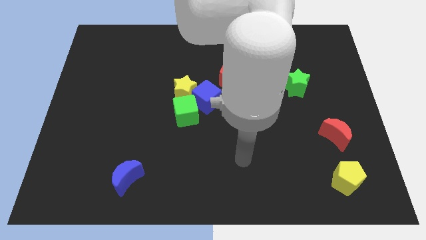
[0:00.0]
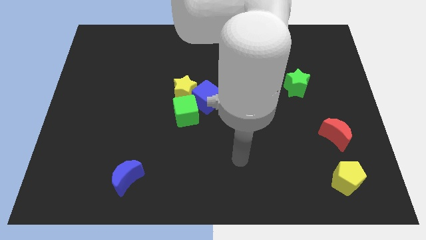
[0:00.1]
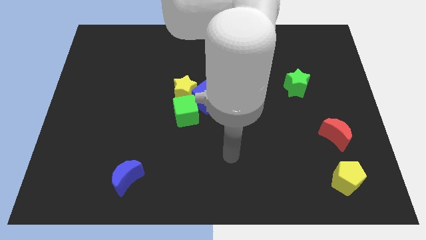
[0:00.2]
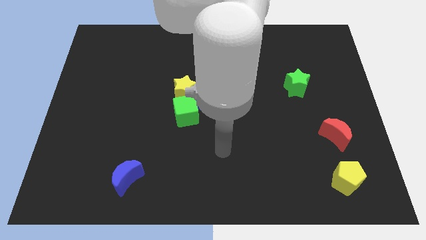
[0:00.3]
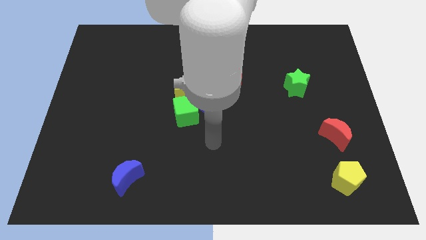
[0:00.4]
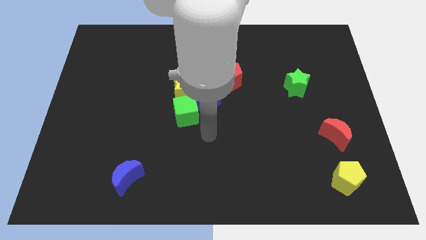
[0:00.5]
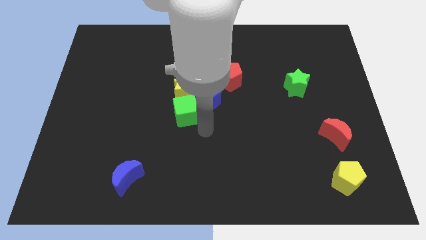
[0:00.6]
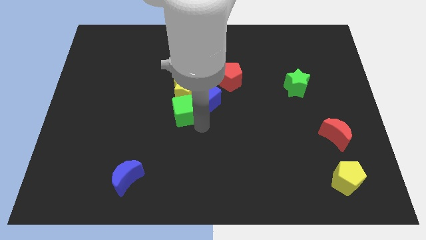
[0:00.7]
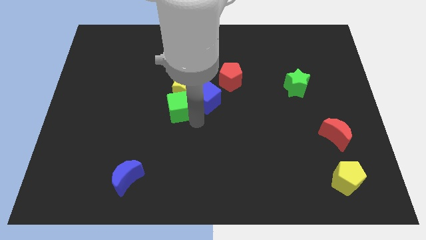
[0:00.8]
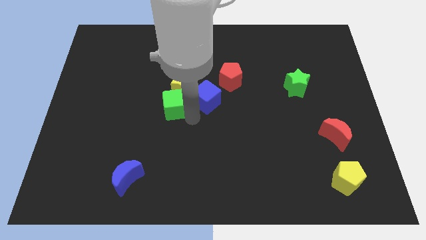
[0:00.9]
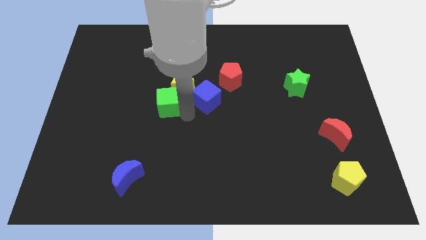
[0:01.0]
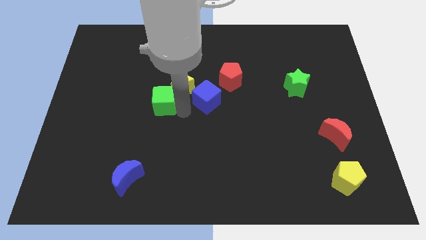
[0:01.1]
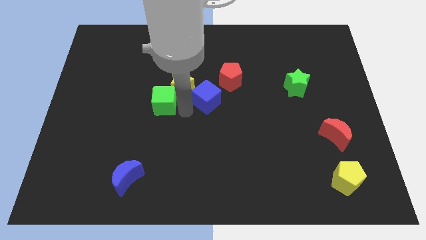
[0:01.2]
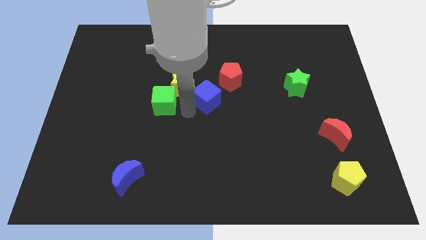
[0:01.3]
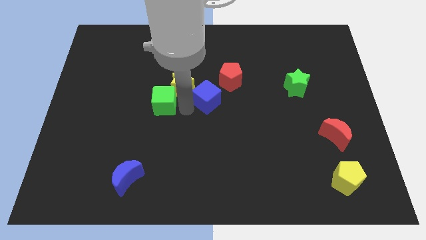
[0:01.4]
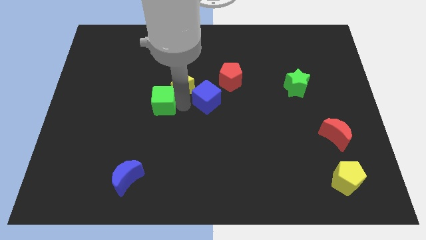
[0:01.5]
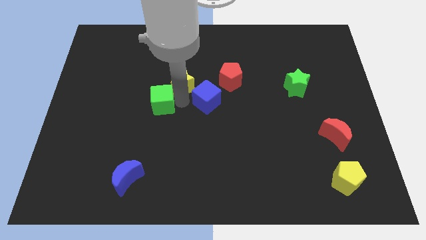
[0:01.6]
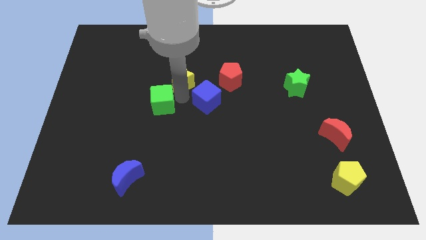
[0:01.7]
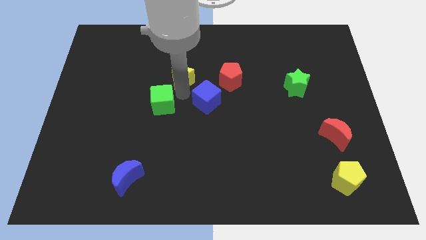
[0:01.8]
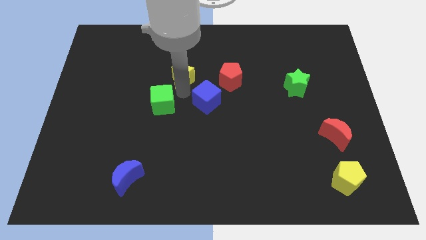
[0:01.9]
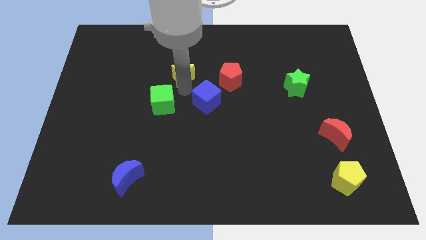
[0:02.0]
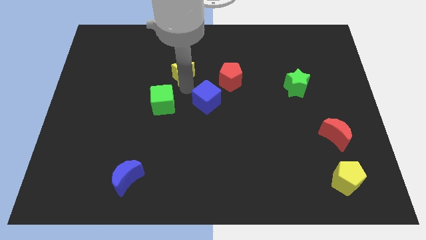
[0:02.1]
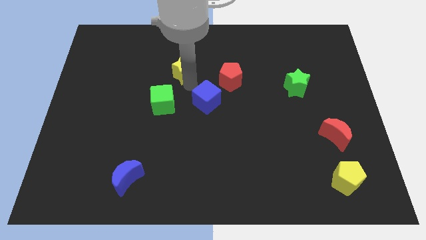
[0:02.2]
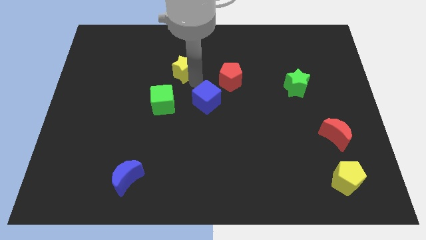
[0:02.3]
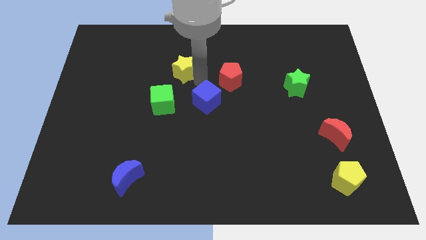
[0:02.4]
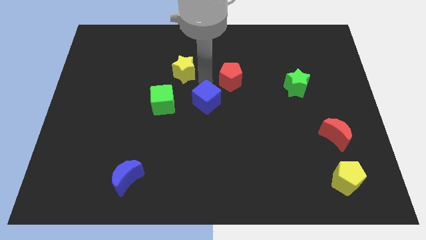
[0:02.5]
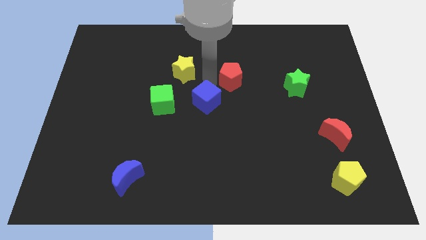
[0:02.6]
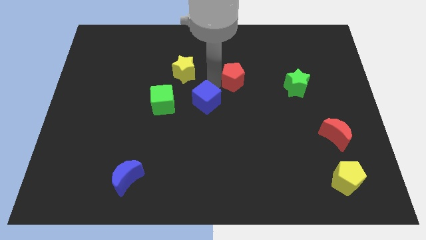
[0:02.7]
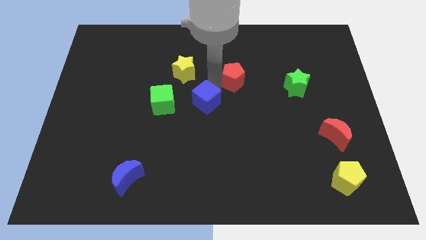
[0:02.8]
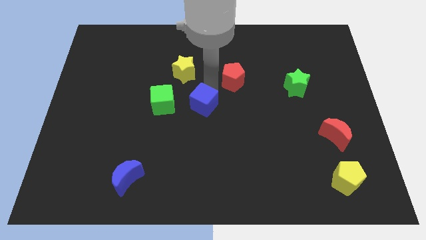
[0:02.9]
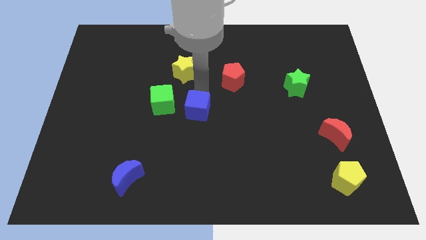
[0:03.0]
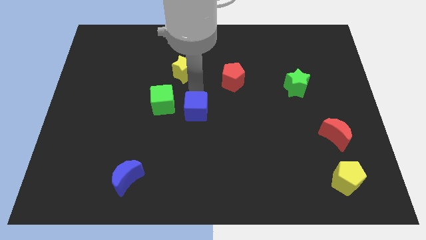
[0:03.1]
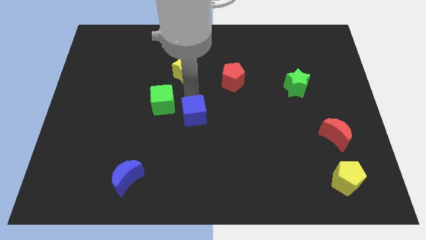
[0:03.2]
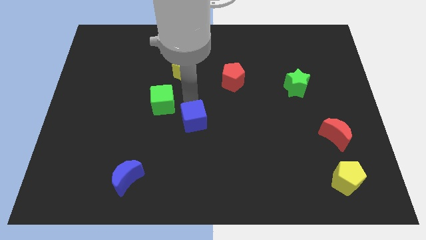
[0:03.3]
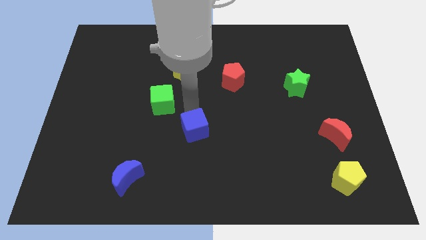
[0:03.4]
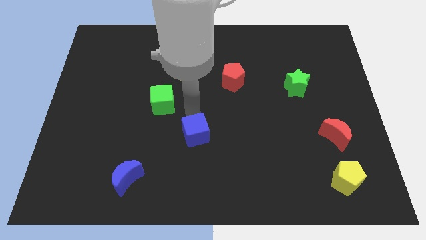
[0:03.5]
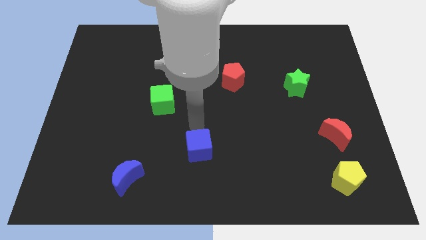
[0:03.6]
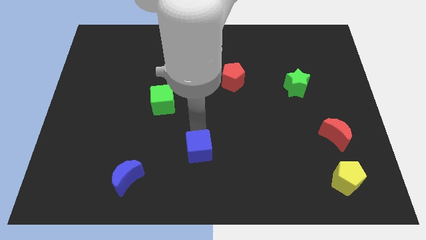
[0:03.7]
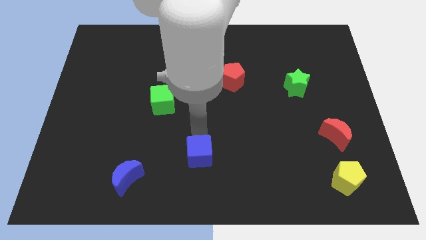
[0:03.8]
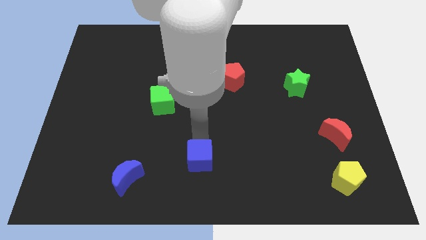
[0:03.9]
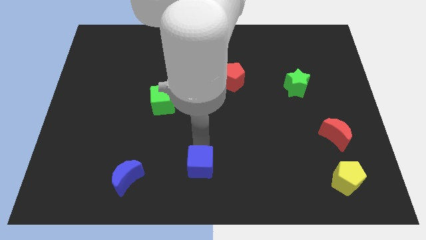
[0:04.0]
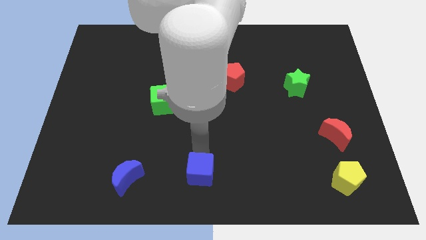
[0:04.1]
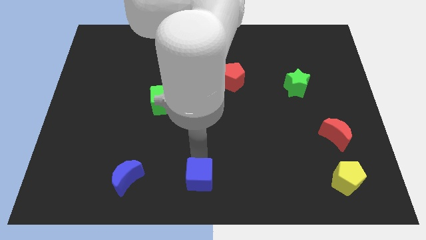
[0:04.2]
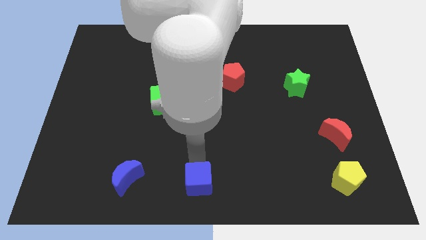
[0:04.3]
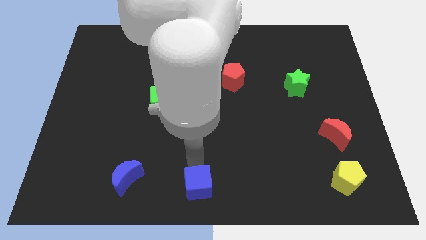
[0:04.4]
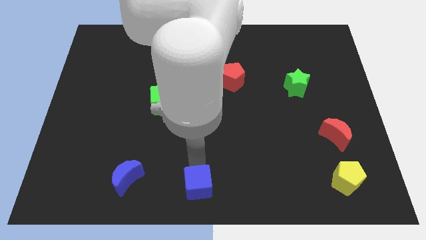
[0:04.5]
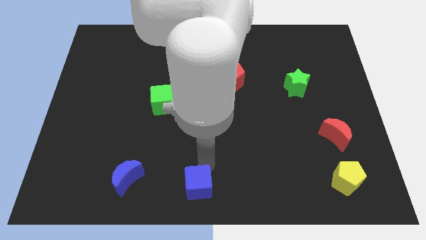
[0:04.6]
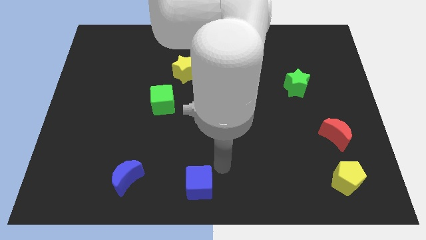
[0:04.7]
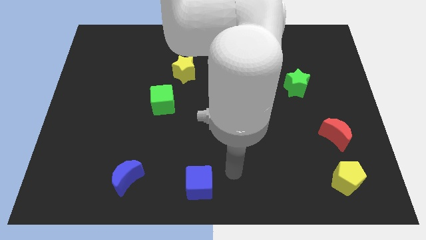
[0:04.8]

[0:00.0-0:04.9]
push blue cube to the bottom center of the board

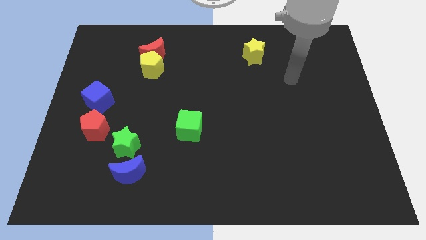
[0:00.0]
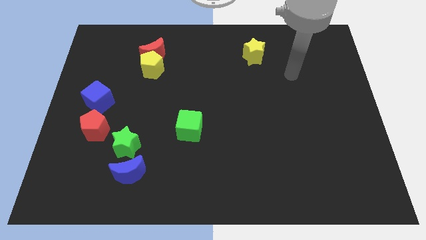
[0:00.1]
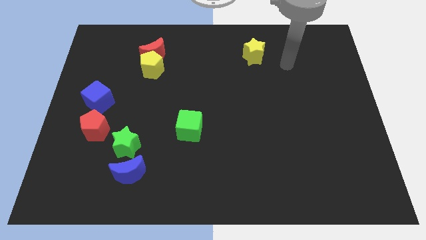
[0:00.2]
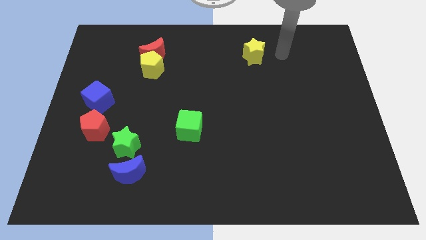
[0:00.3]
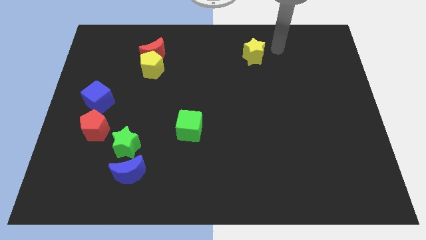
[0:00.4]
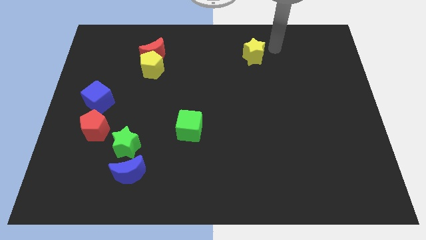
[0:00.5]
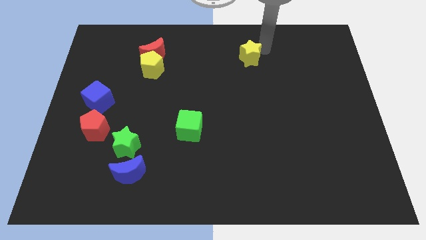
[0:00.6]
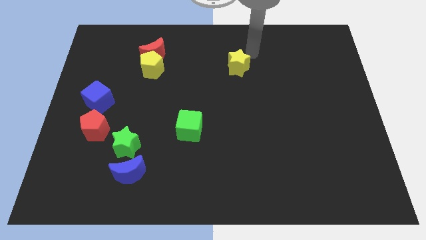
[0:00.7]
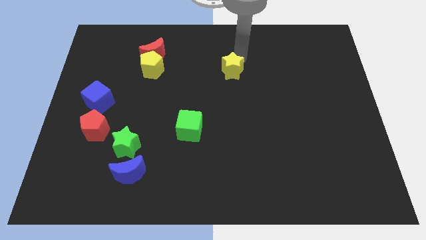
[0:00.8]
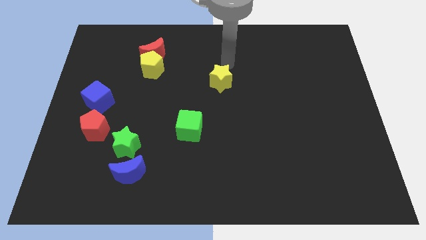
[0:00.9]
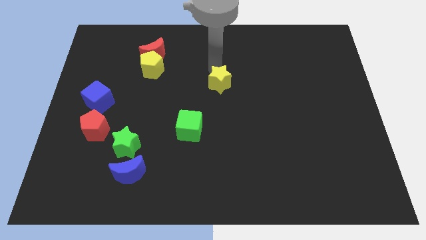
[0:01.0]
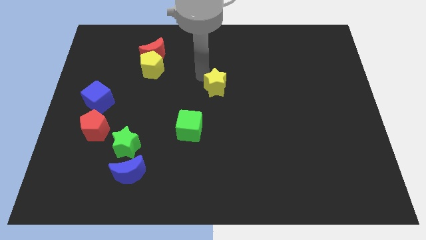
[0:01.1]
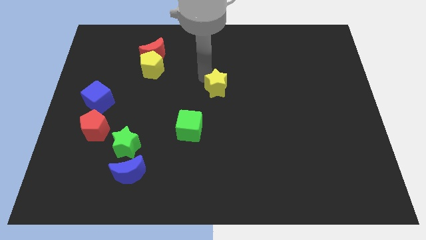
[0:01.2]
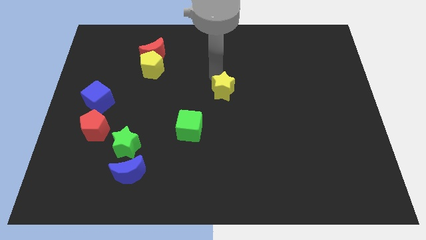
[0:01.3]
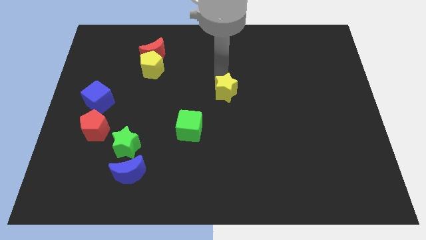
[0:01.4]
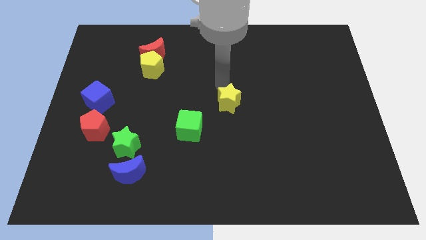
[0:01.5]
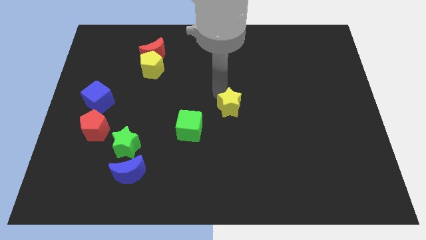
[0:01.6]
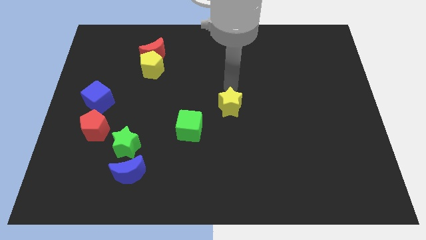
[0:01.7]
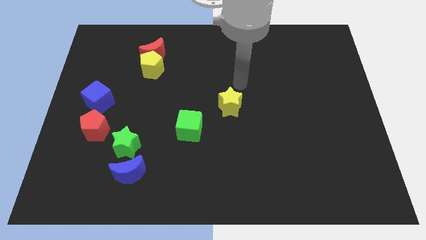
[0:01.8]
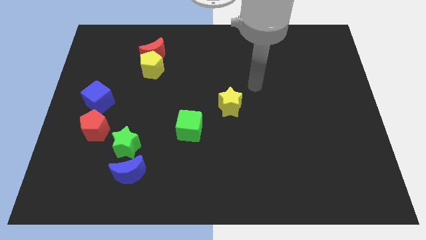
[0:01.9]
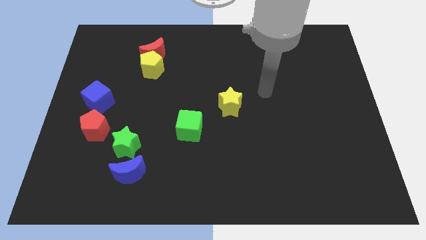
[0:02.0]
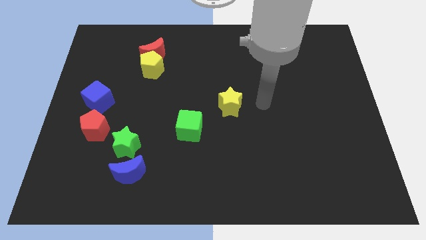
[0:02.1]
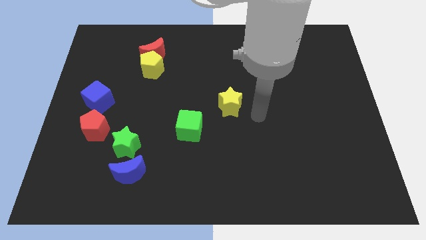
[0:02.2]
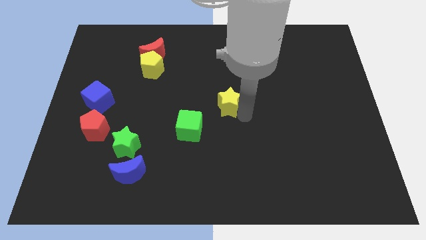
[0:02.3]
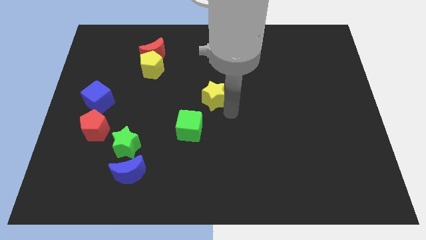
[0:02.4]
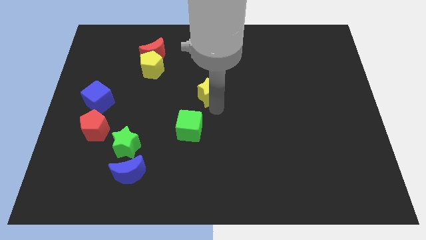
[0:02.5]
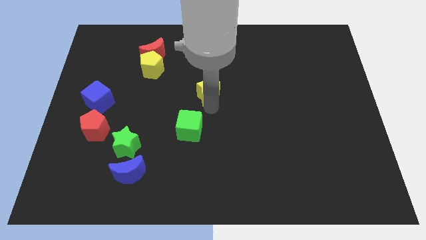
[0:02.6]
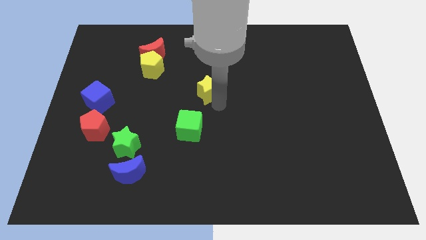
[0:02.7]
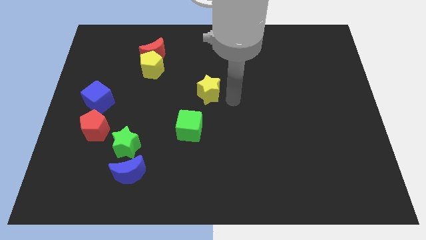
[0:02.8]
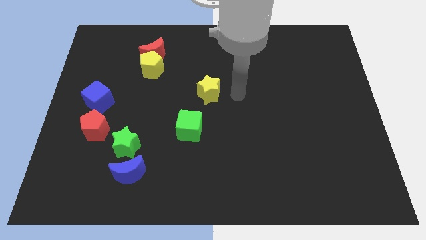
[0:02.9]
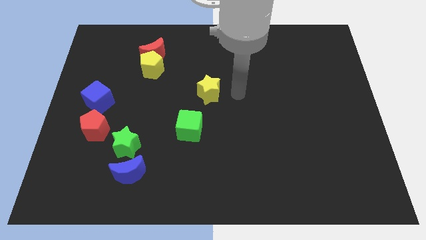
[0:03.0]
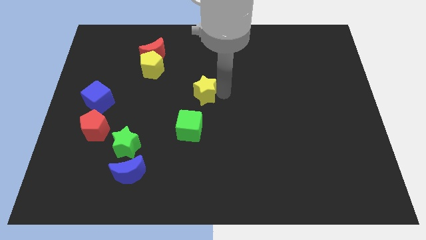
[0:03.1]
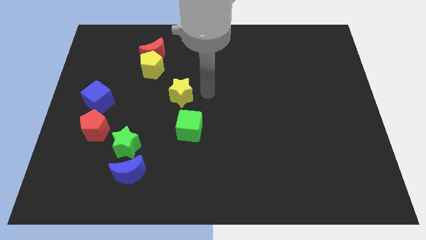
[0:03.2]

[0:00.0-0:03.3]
put the yellow star above the green cube

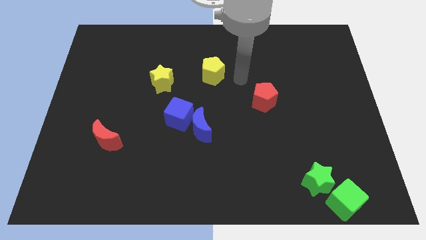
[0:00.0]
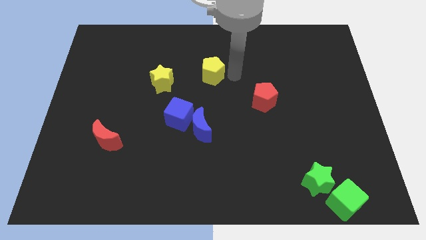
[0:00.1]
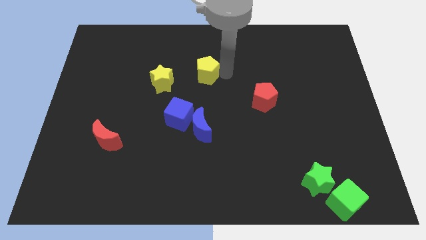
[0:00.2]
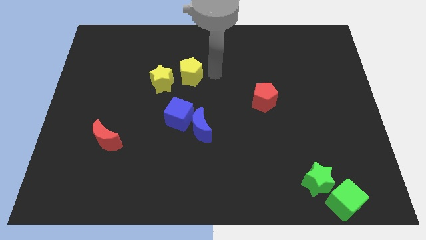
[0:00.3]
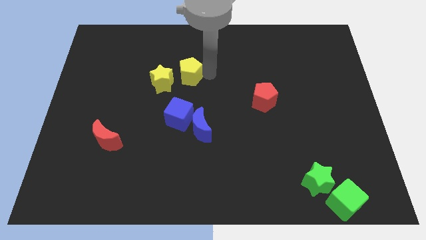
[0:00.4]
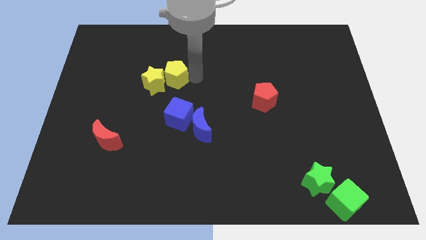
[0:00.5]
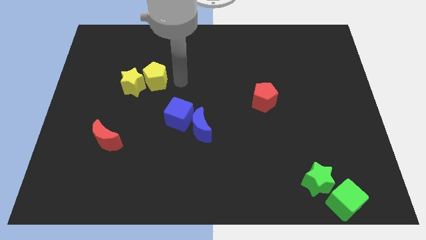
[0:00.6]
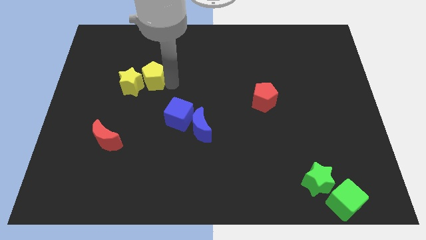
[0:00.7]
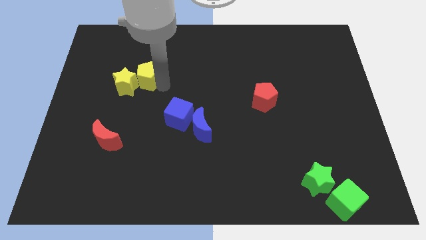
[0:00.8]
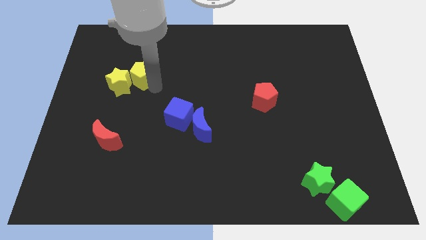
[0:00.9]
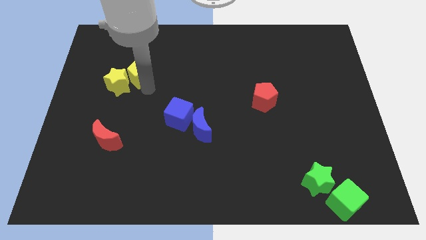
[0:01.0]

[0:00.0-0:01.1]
move the yellow pentagon into the yellow star
